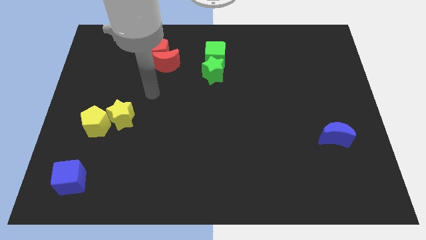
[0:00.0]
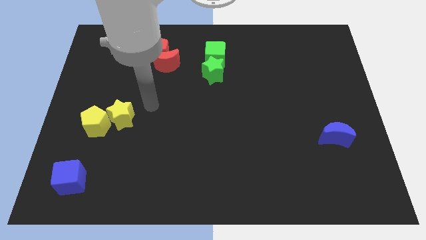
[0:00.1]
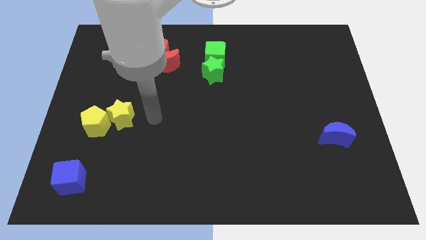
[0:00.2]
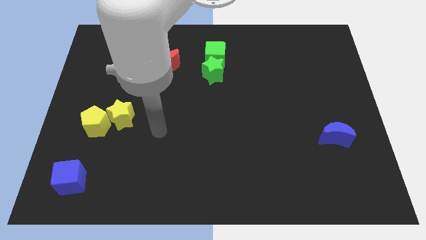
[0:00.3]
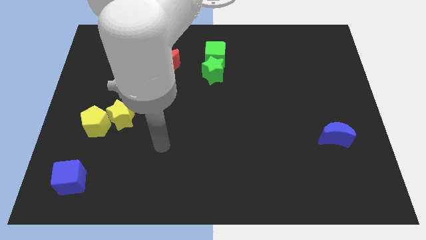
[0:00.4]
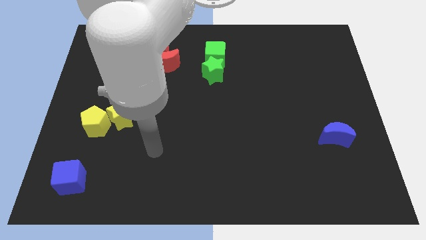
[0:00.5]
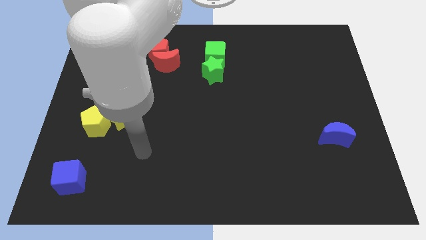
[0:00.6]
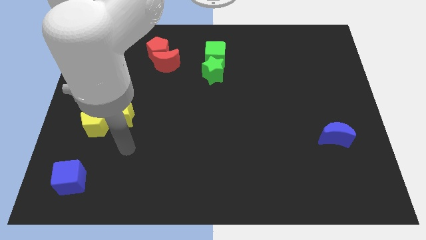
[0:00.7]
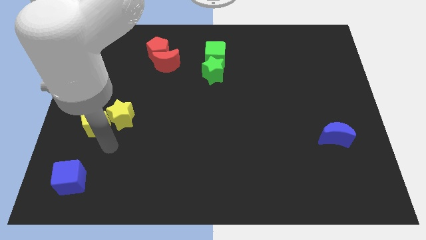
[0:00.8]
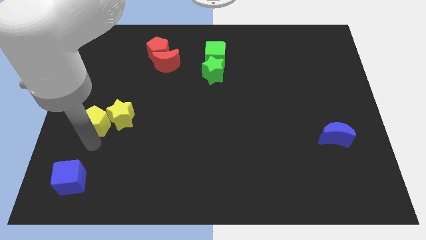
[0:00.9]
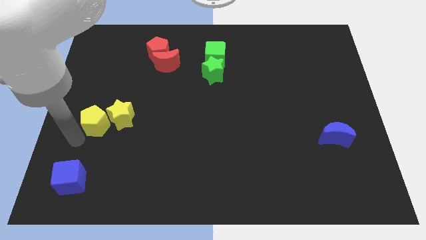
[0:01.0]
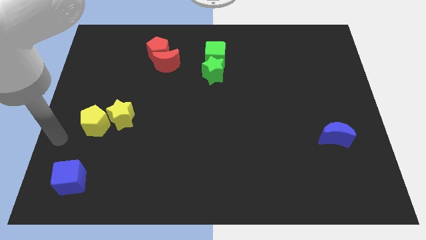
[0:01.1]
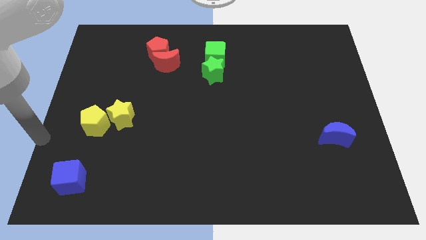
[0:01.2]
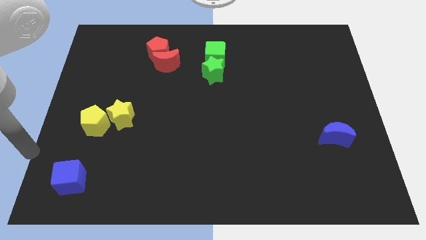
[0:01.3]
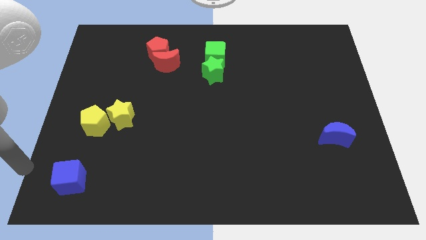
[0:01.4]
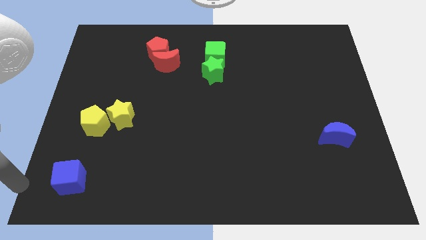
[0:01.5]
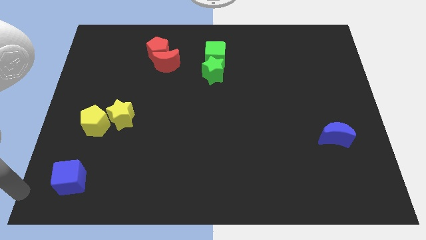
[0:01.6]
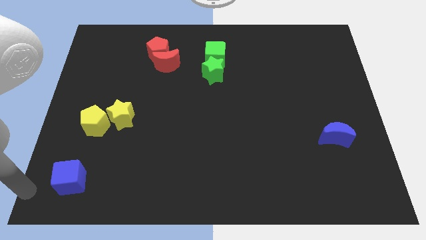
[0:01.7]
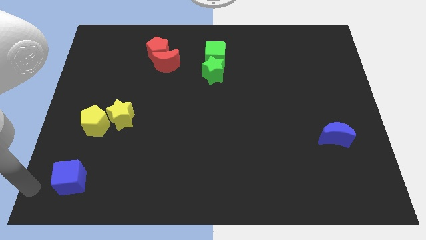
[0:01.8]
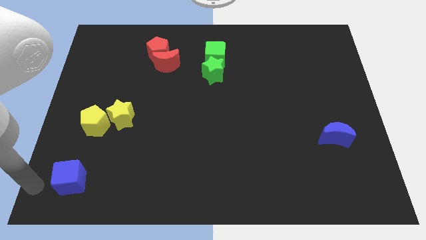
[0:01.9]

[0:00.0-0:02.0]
move the arm towards the blue cube

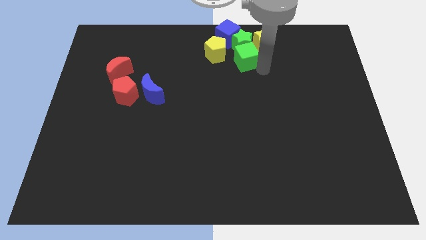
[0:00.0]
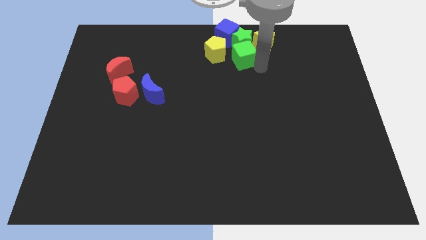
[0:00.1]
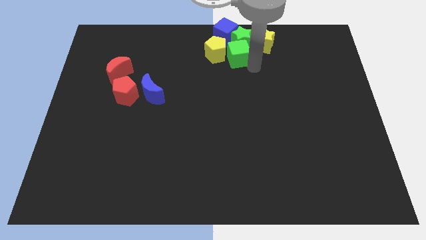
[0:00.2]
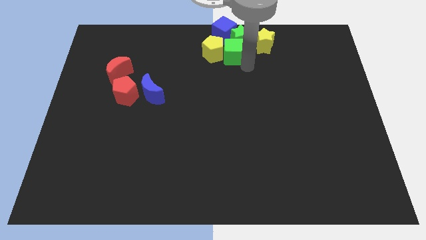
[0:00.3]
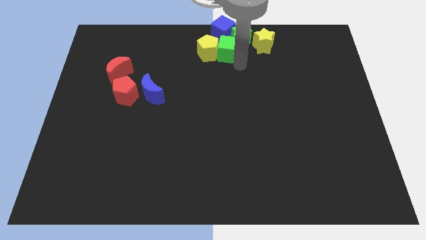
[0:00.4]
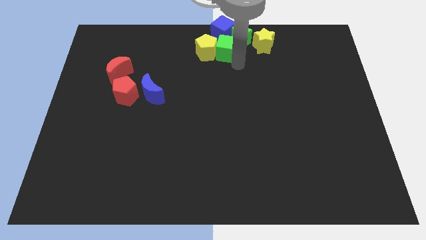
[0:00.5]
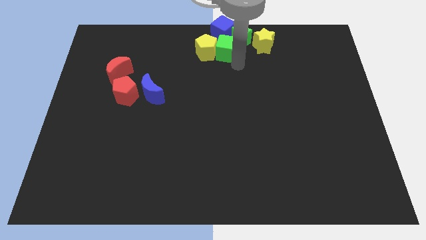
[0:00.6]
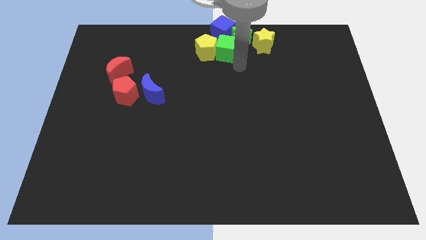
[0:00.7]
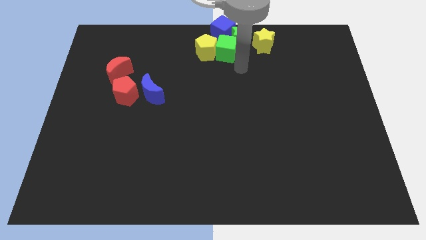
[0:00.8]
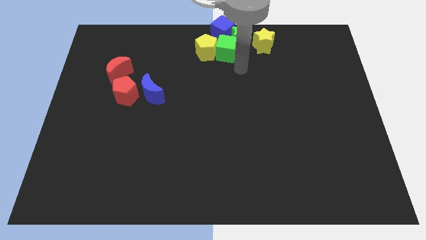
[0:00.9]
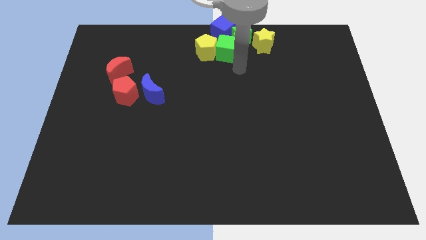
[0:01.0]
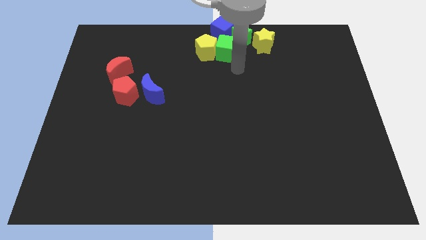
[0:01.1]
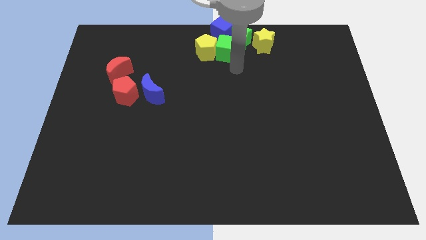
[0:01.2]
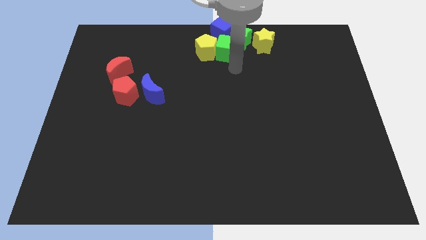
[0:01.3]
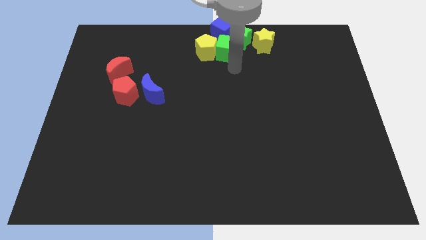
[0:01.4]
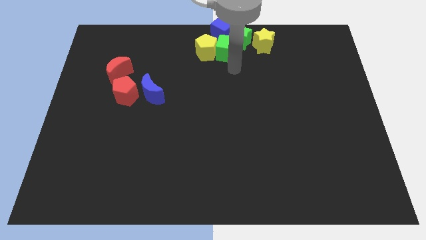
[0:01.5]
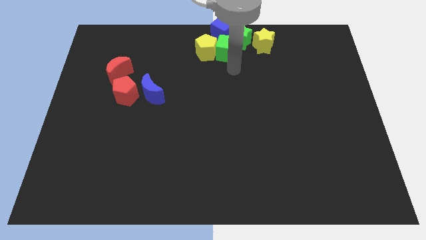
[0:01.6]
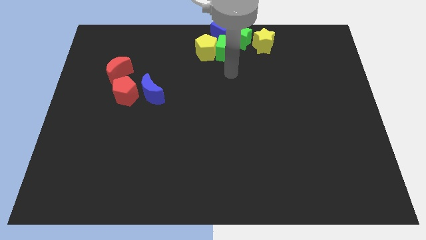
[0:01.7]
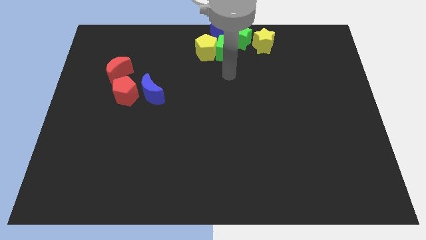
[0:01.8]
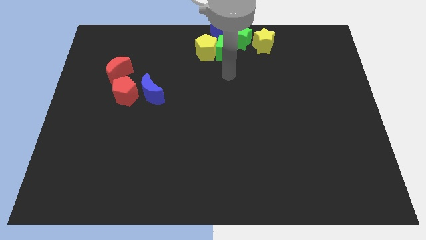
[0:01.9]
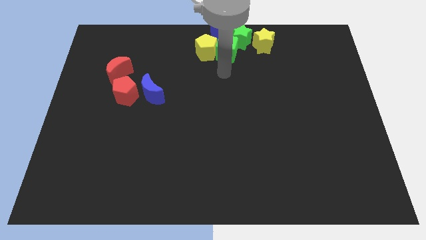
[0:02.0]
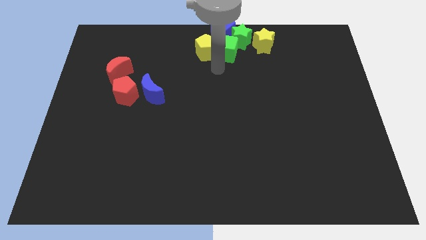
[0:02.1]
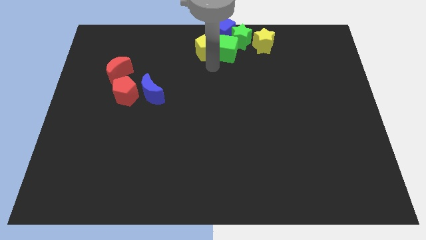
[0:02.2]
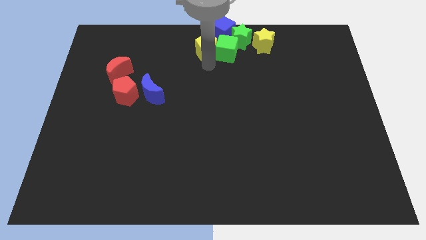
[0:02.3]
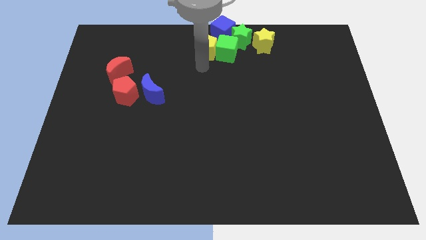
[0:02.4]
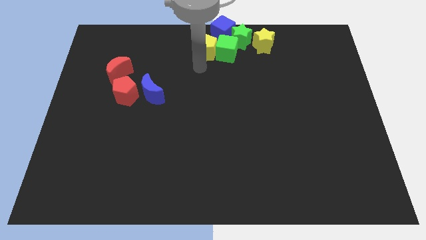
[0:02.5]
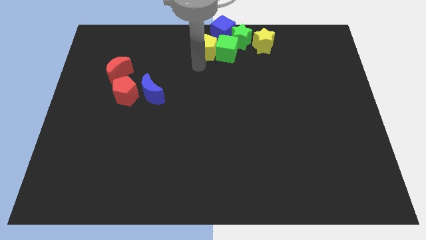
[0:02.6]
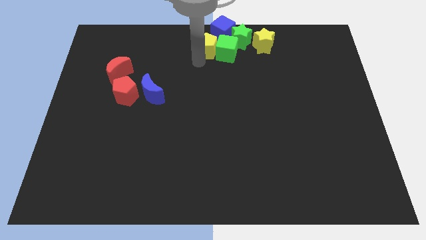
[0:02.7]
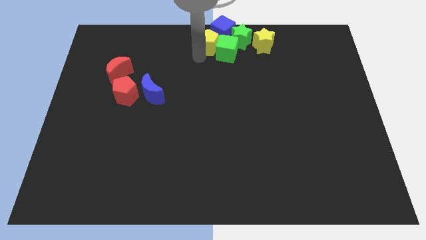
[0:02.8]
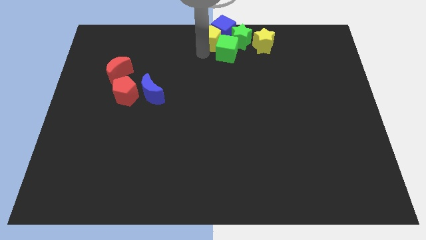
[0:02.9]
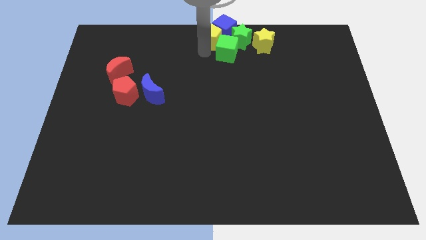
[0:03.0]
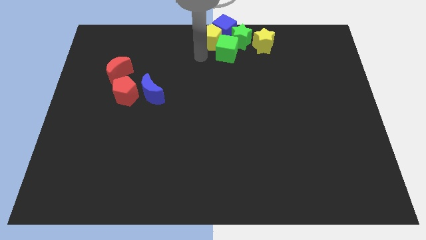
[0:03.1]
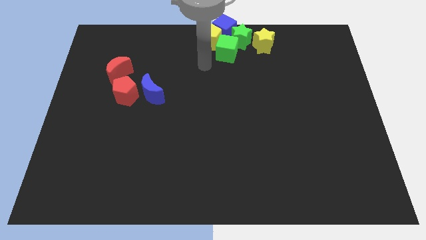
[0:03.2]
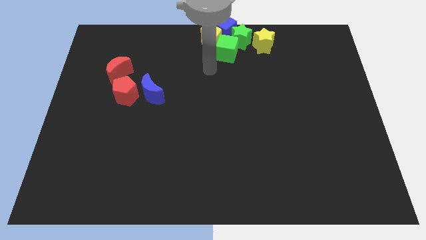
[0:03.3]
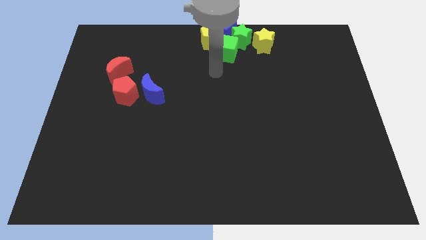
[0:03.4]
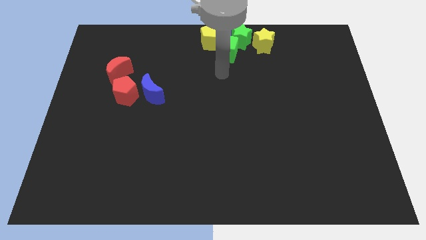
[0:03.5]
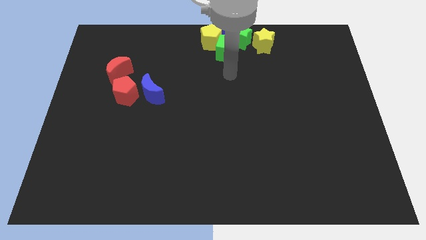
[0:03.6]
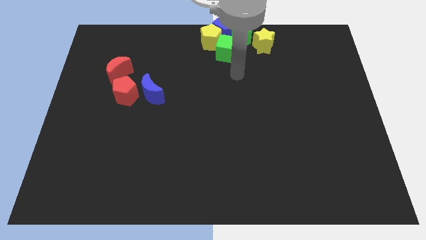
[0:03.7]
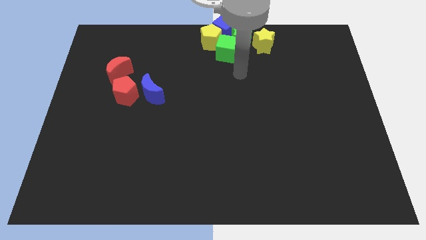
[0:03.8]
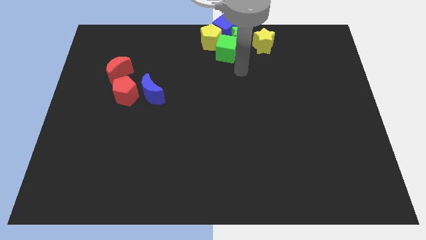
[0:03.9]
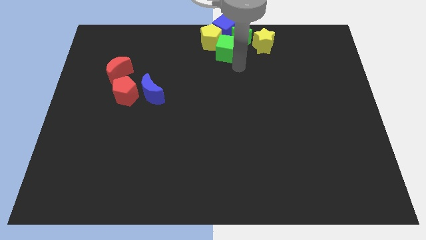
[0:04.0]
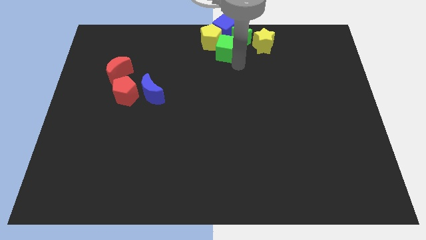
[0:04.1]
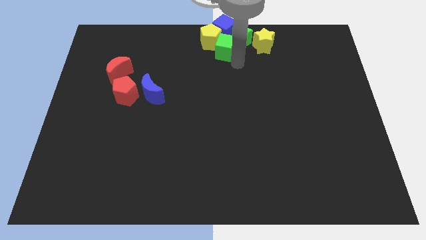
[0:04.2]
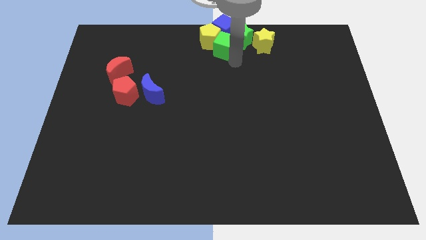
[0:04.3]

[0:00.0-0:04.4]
push the blocks towards top middle of the board

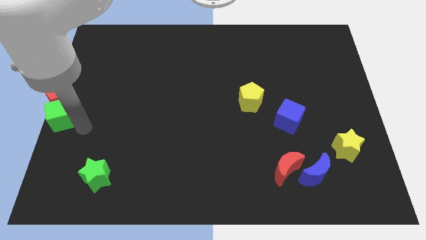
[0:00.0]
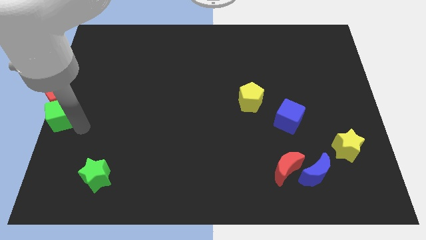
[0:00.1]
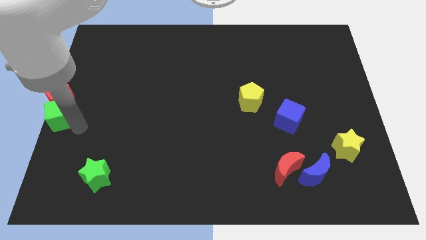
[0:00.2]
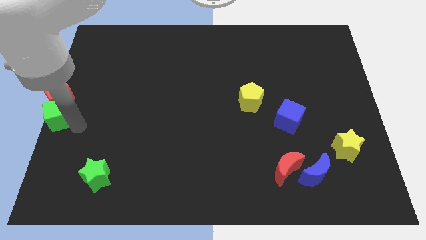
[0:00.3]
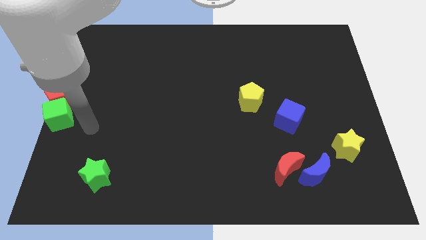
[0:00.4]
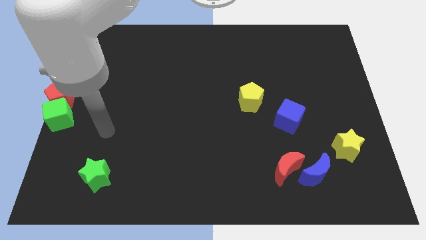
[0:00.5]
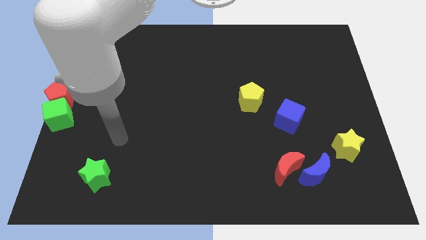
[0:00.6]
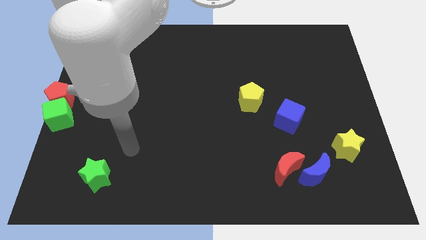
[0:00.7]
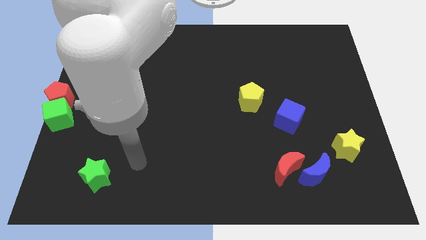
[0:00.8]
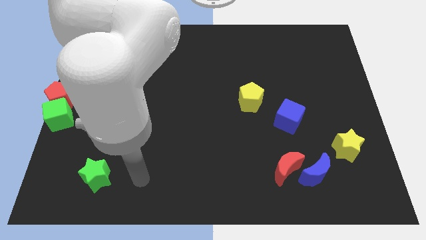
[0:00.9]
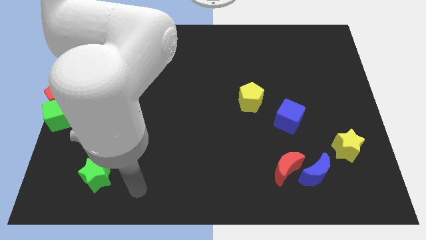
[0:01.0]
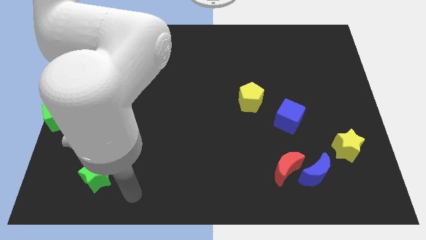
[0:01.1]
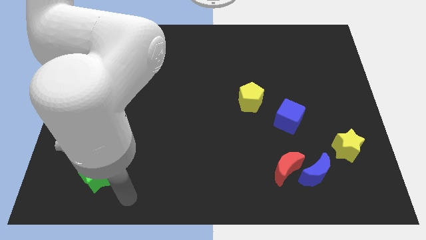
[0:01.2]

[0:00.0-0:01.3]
move the arm away from the green cube

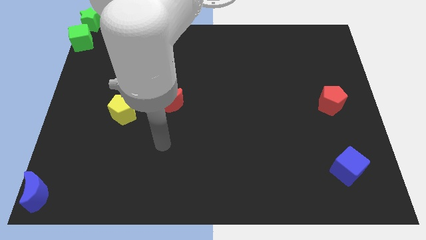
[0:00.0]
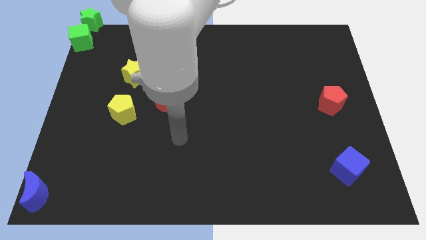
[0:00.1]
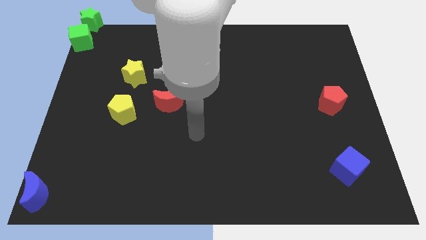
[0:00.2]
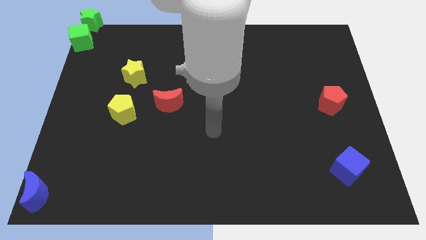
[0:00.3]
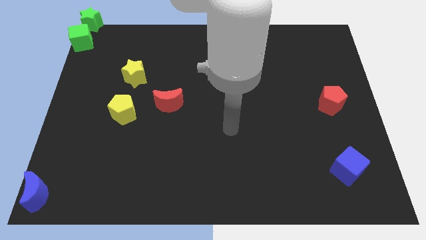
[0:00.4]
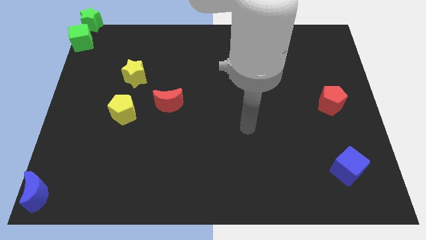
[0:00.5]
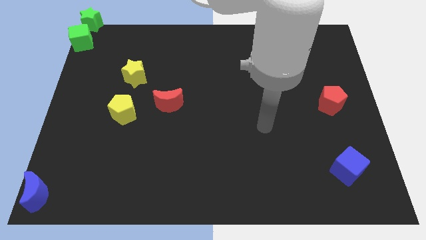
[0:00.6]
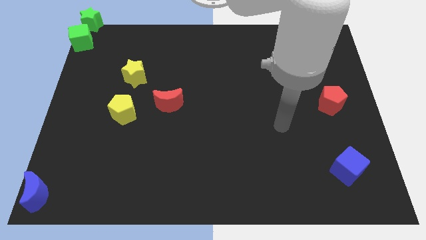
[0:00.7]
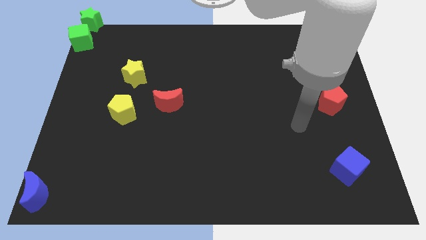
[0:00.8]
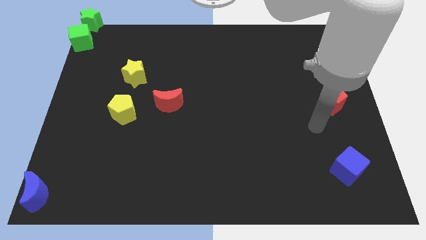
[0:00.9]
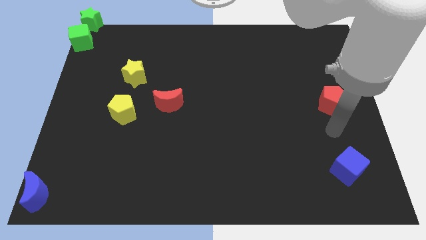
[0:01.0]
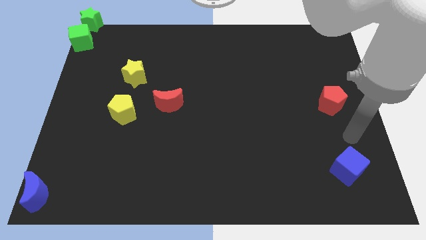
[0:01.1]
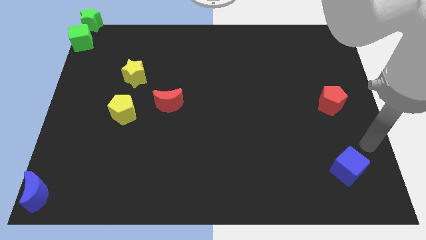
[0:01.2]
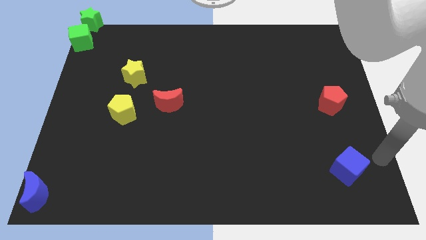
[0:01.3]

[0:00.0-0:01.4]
move your hand towards the blue cube
